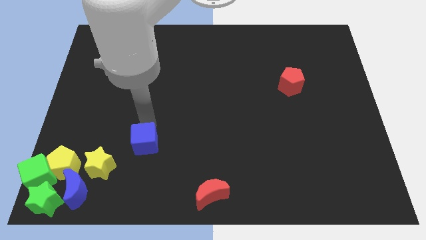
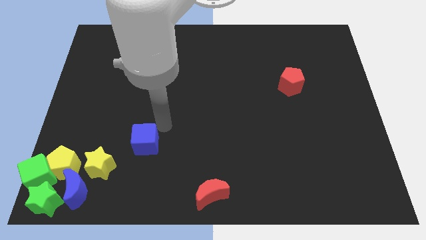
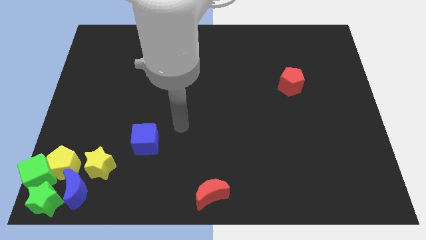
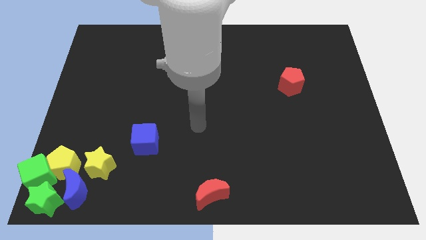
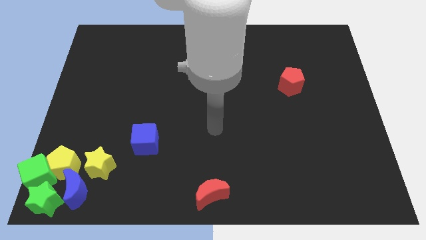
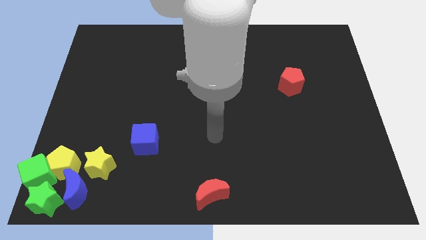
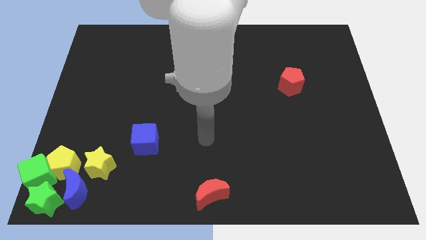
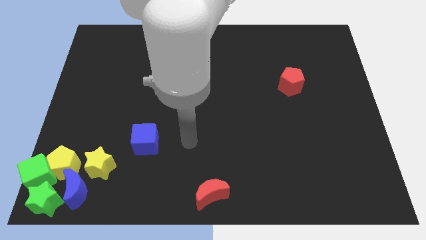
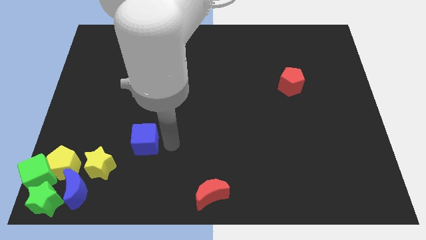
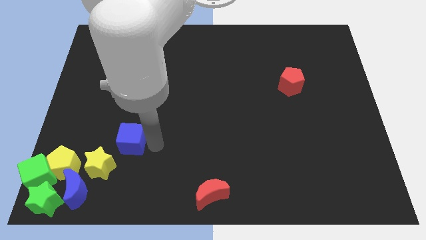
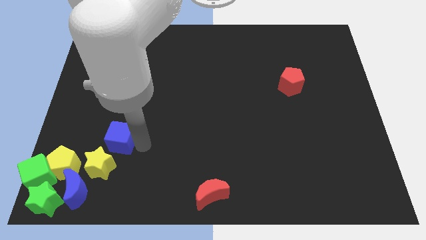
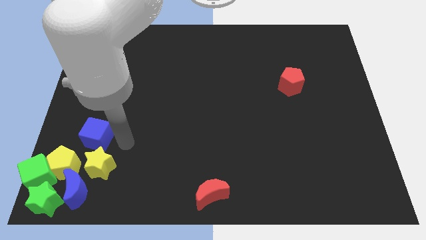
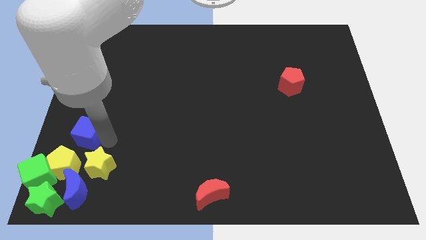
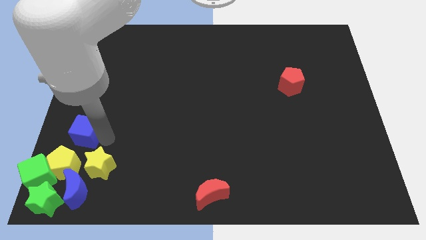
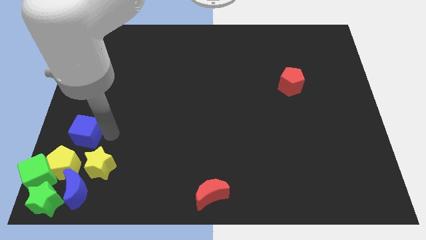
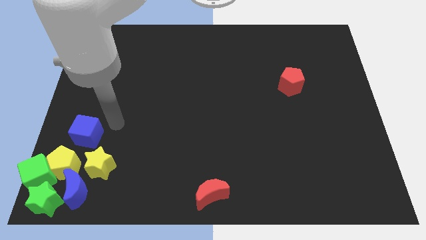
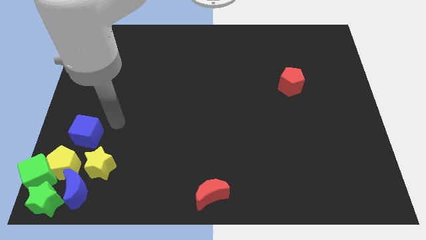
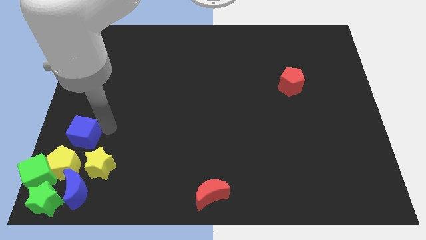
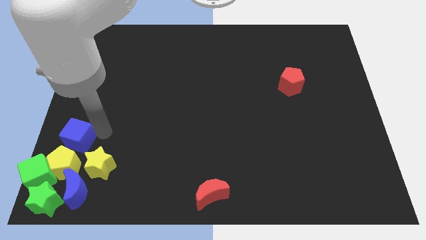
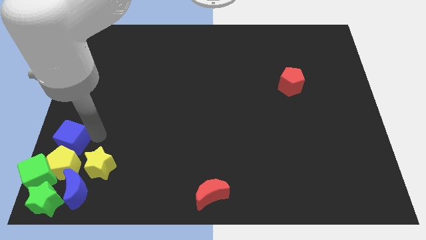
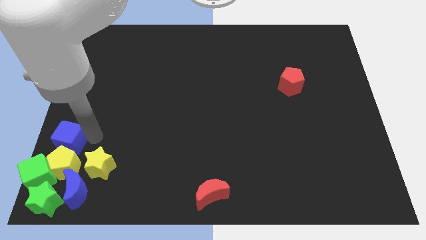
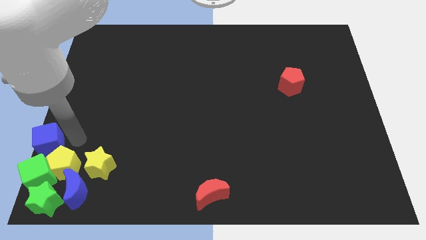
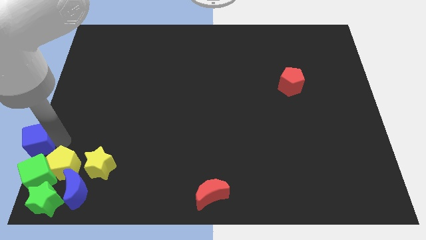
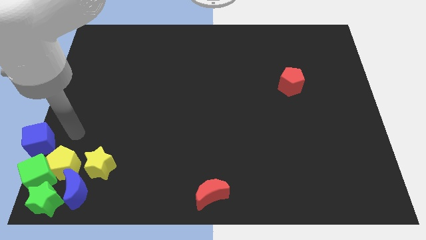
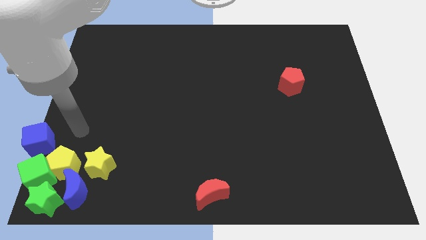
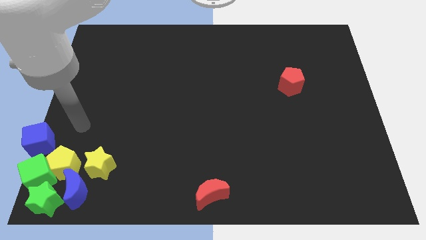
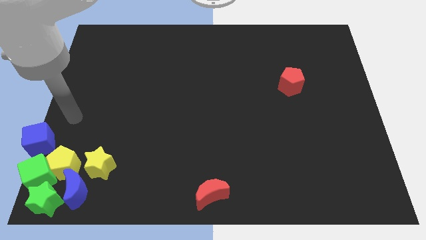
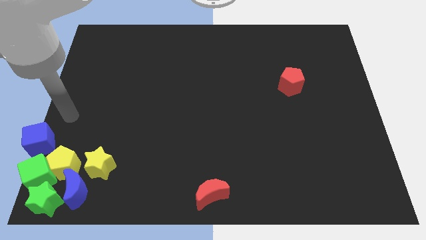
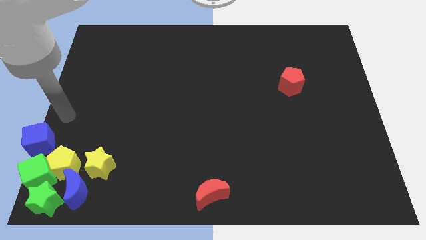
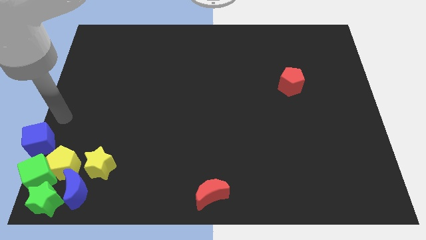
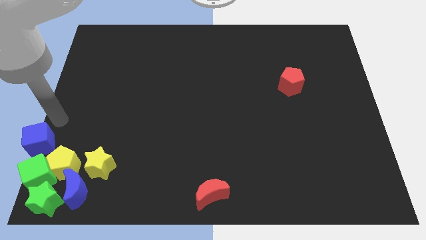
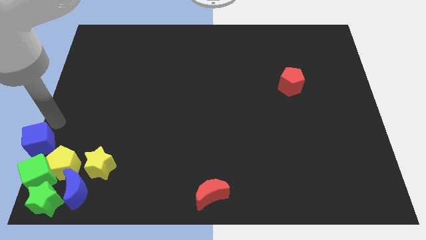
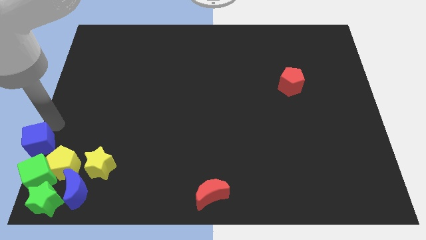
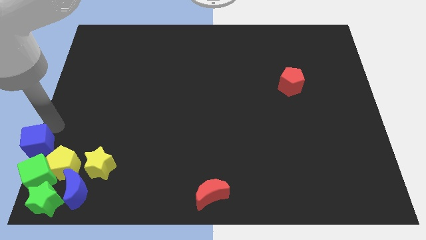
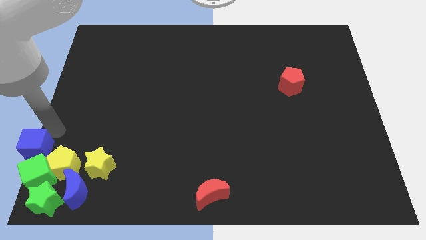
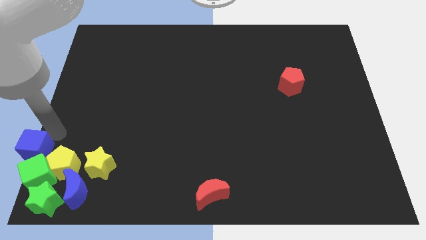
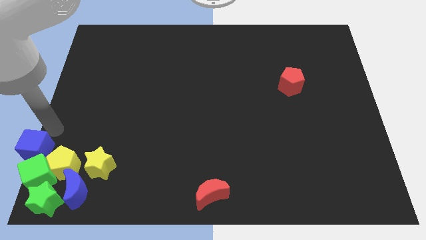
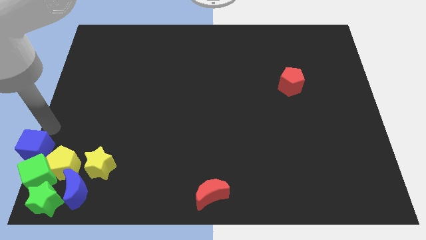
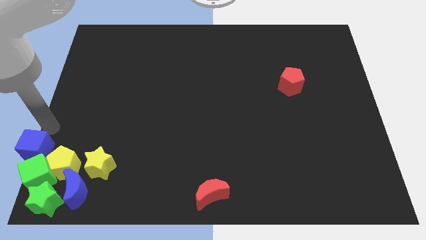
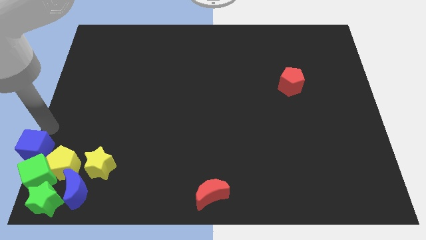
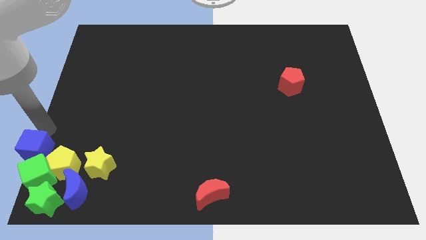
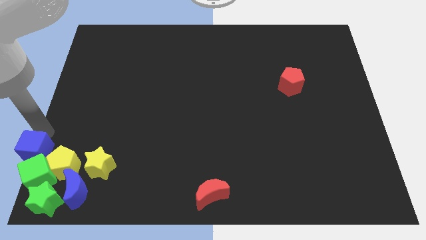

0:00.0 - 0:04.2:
move the blue cube towards the green cube

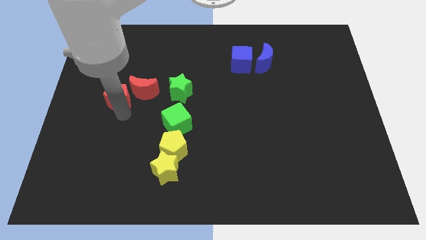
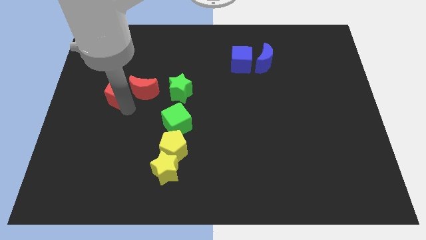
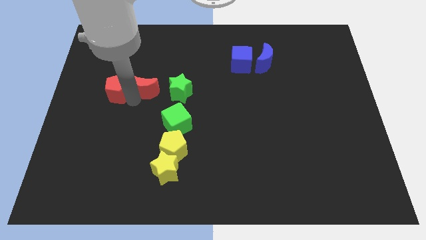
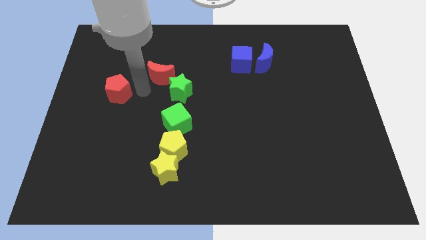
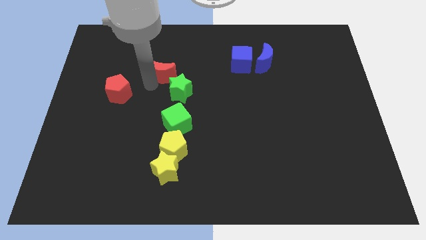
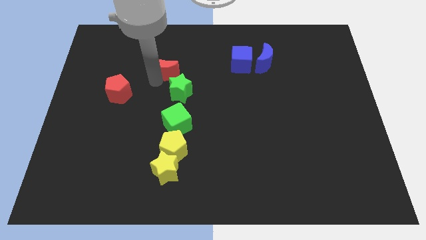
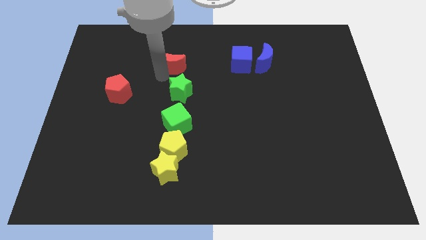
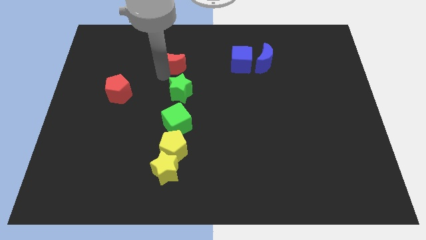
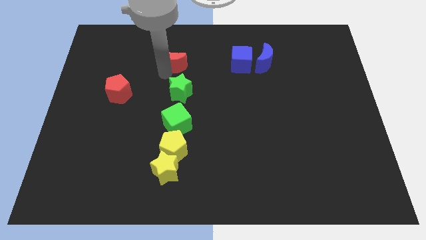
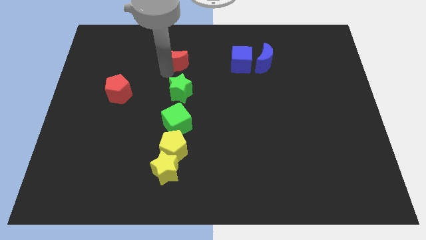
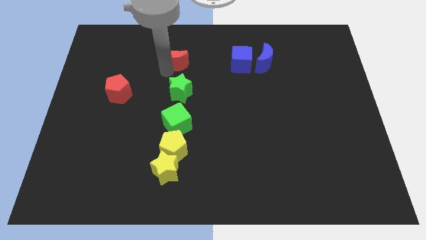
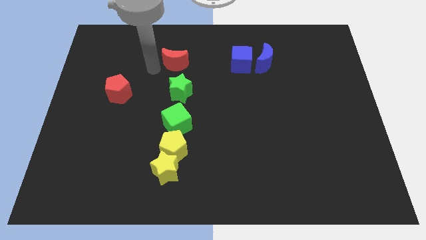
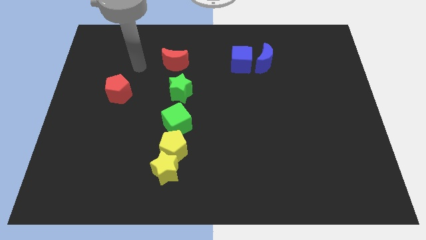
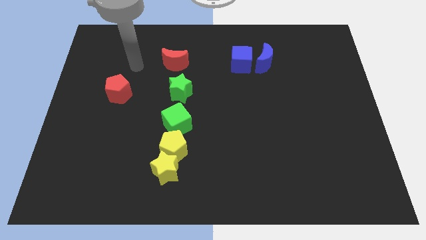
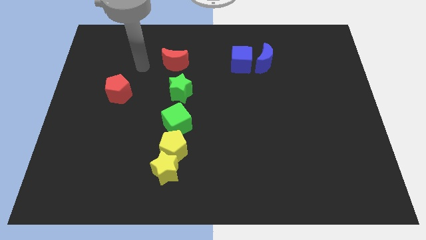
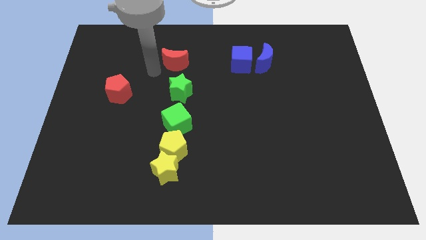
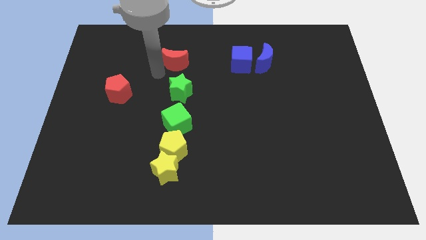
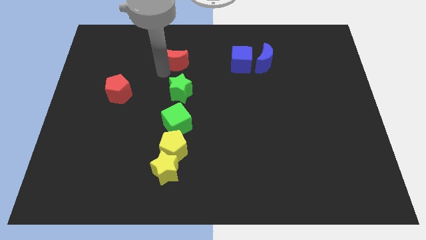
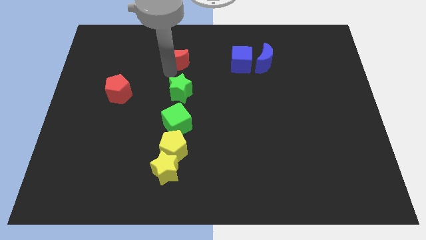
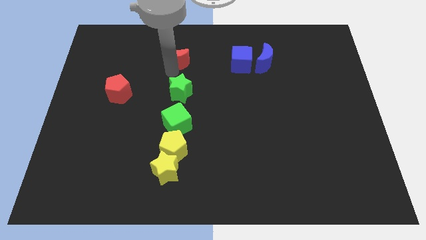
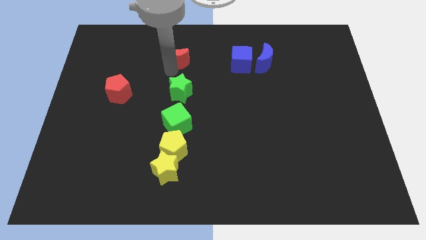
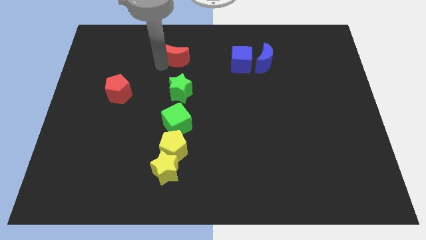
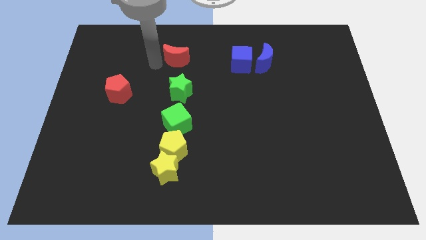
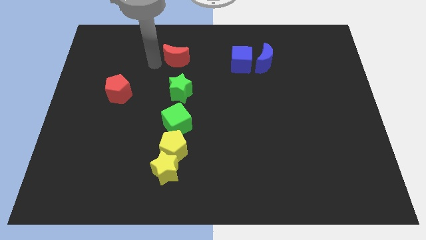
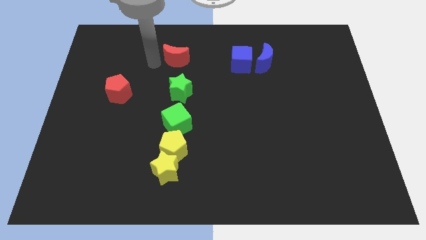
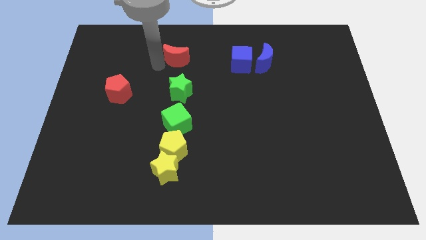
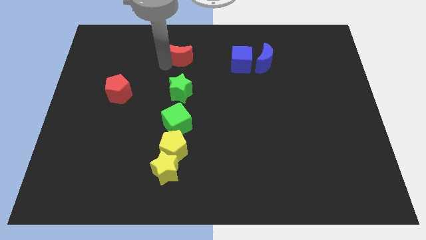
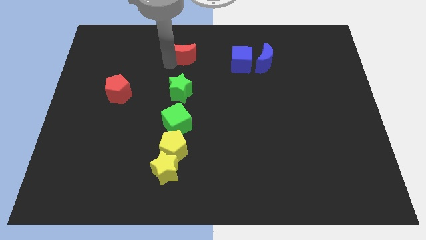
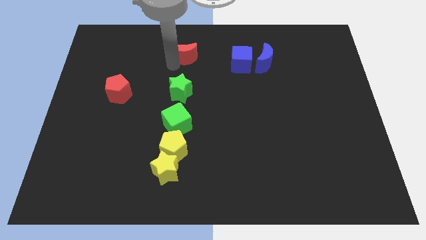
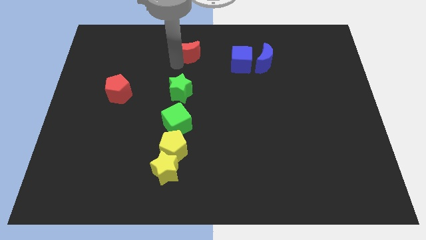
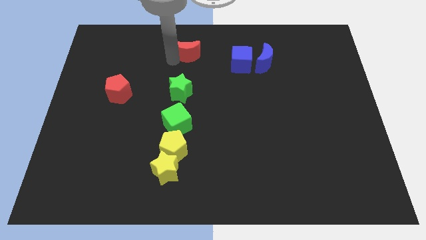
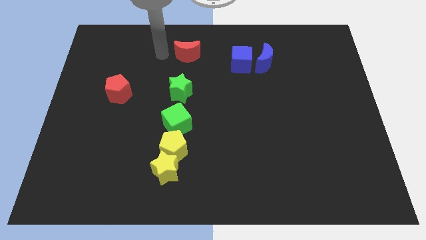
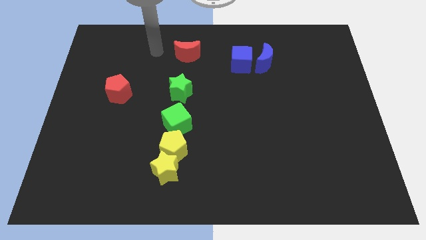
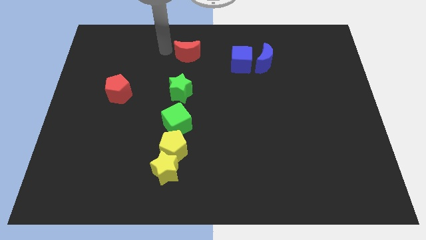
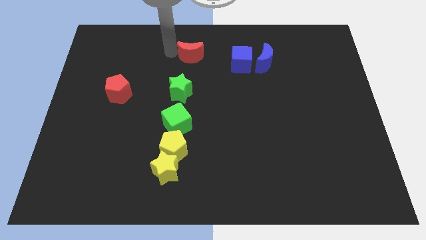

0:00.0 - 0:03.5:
place the red moon above the green star

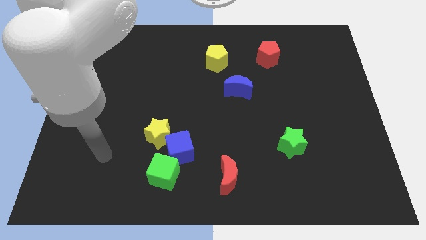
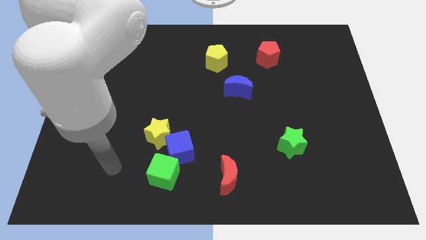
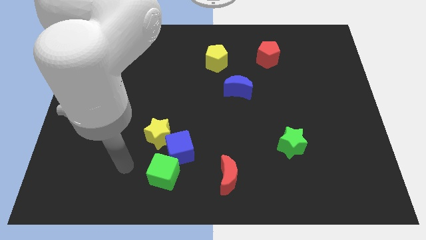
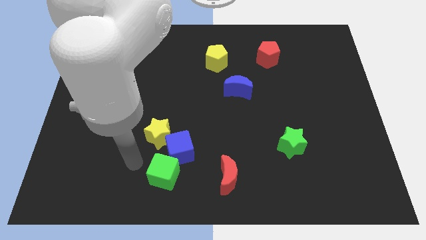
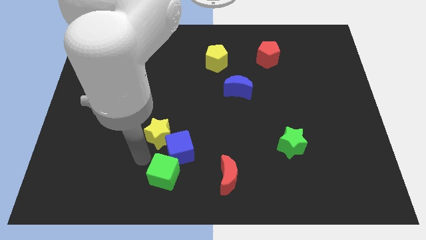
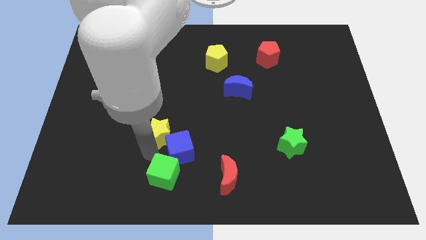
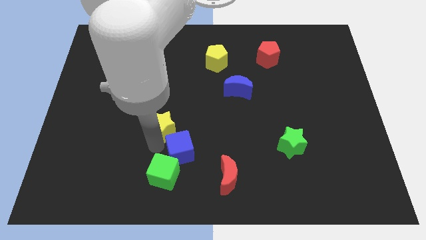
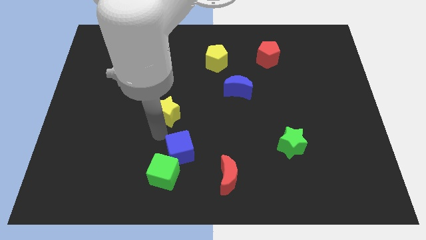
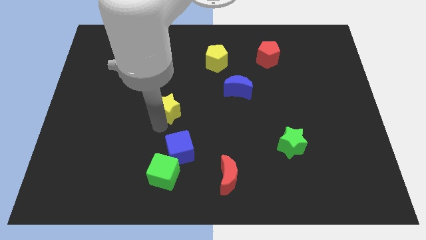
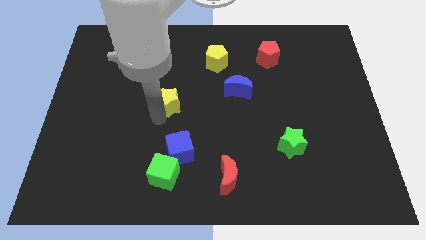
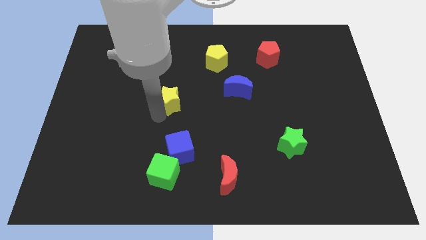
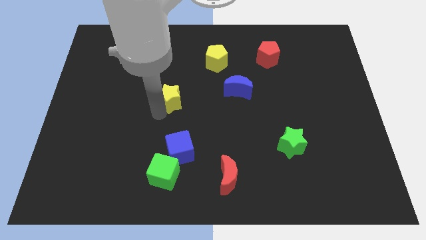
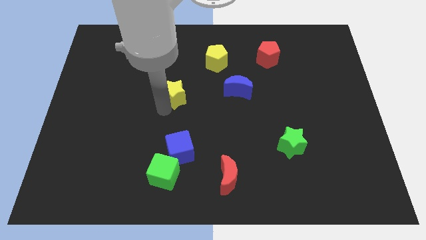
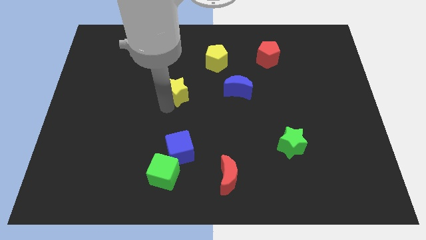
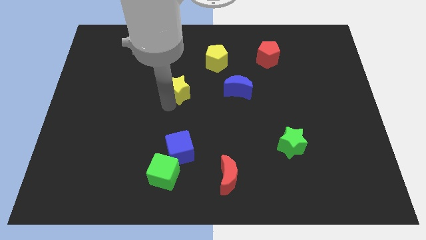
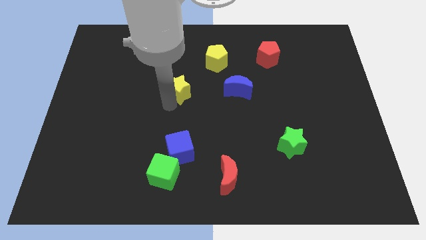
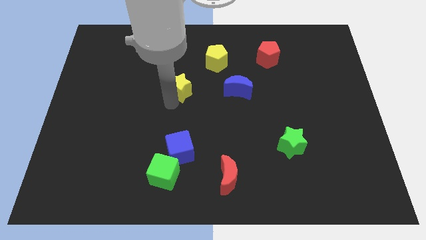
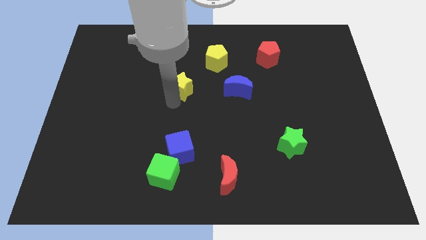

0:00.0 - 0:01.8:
push the yellow star towards the yellow pentagon
